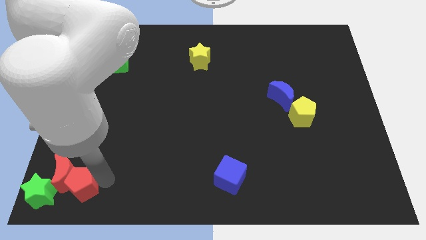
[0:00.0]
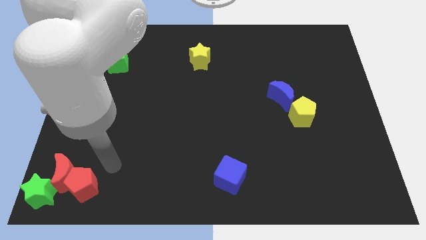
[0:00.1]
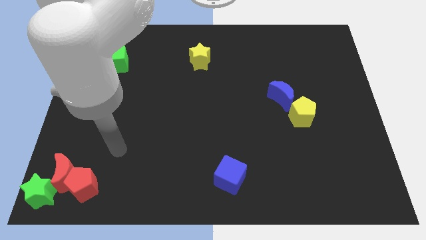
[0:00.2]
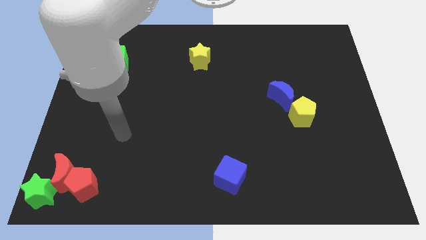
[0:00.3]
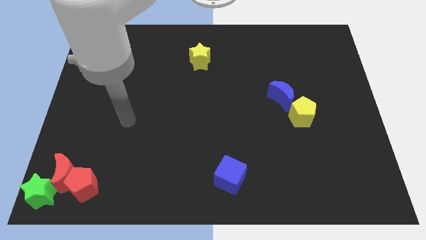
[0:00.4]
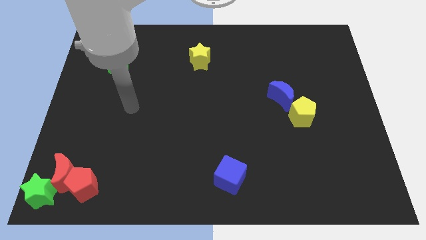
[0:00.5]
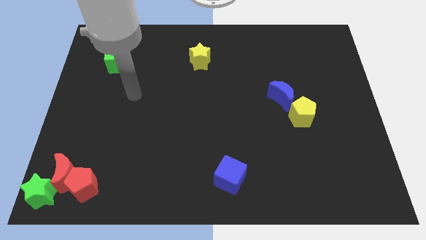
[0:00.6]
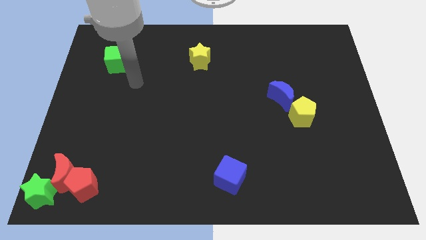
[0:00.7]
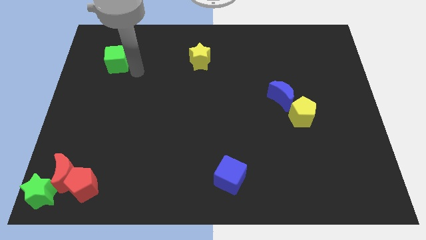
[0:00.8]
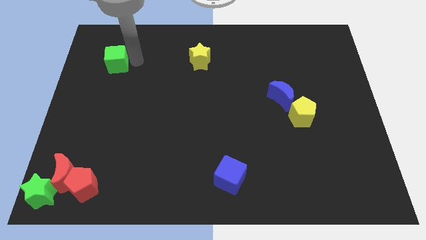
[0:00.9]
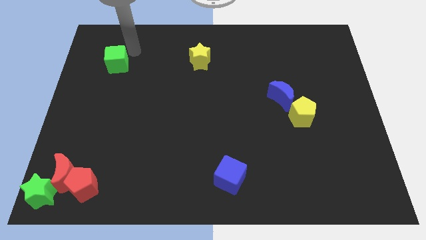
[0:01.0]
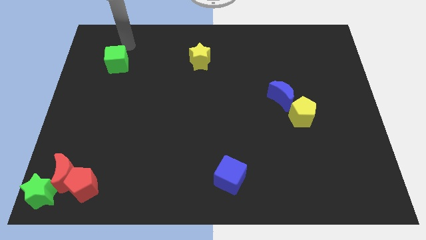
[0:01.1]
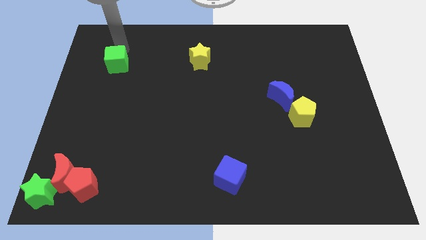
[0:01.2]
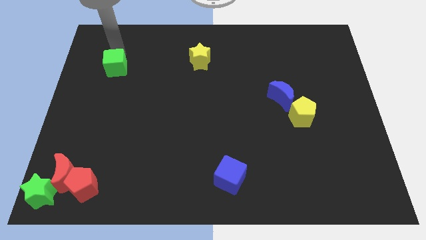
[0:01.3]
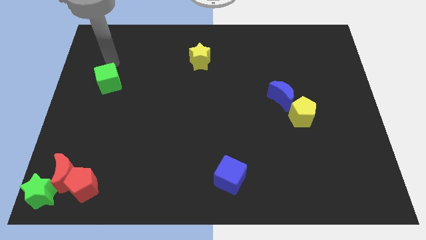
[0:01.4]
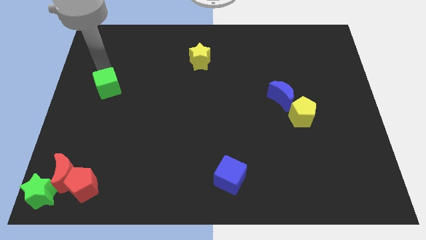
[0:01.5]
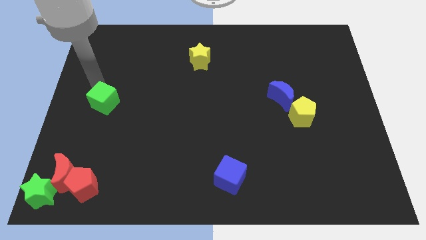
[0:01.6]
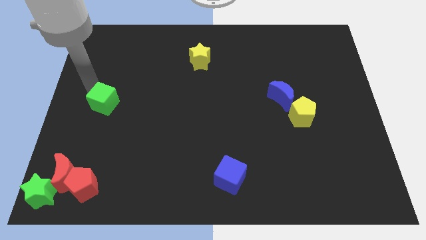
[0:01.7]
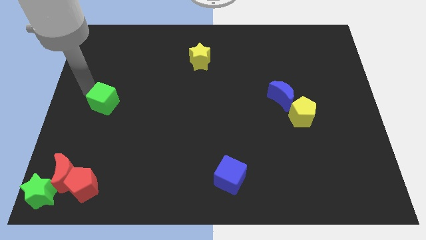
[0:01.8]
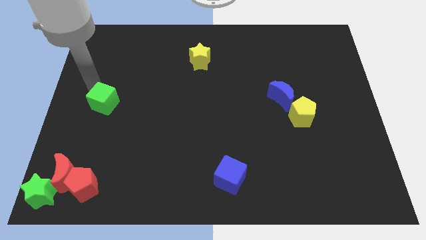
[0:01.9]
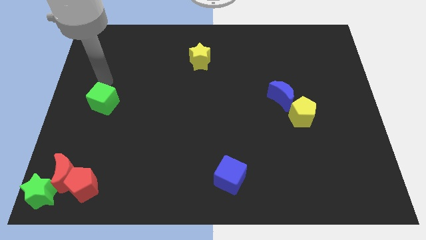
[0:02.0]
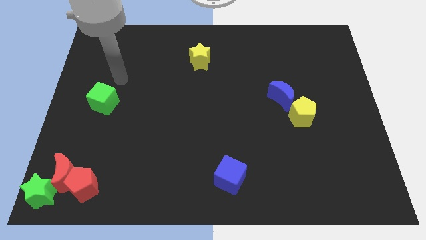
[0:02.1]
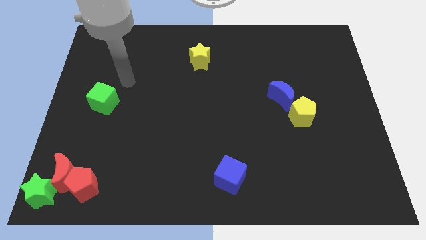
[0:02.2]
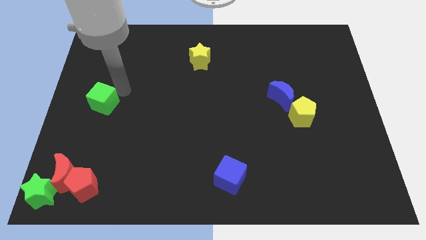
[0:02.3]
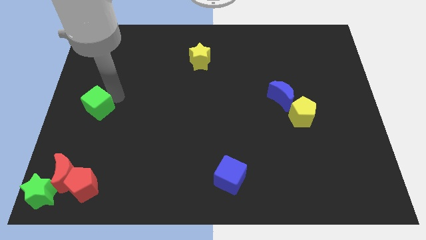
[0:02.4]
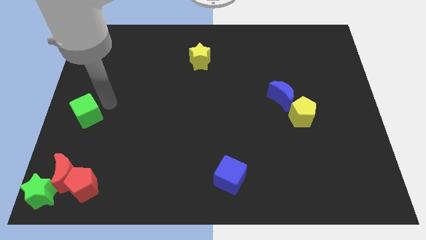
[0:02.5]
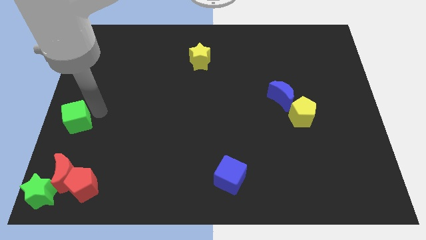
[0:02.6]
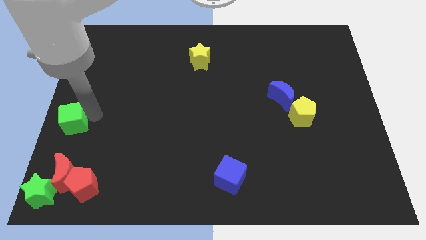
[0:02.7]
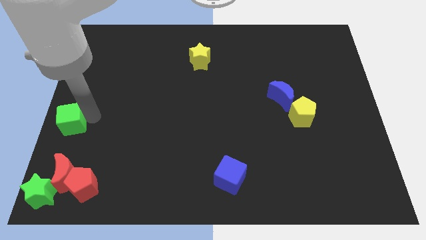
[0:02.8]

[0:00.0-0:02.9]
push green cube close to the red crescent

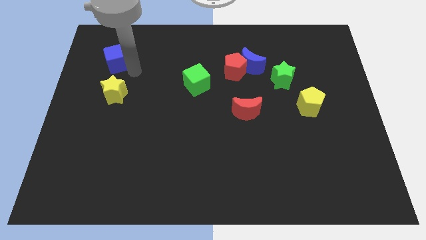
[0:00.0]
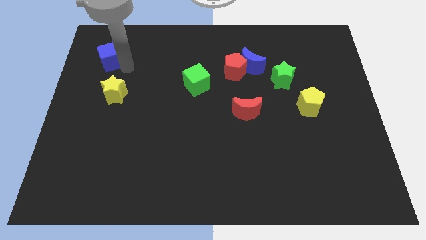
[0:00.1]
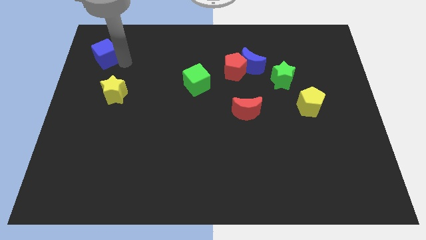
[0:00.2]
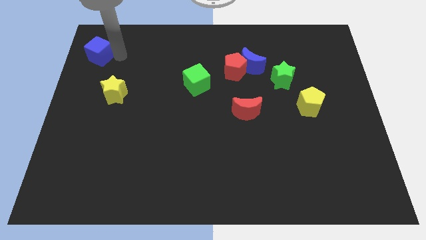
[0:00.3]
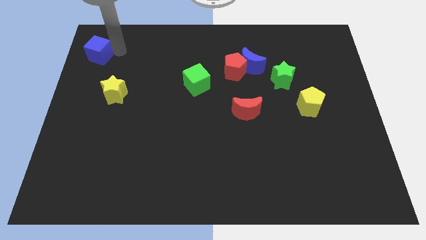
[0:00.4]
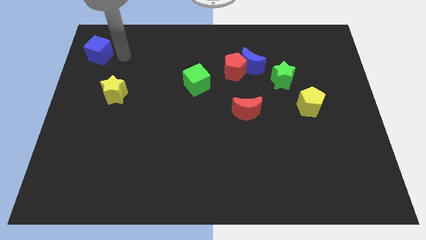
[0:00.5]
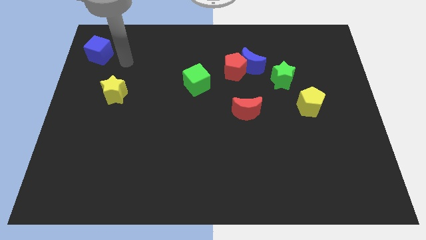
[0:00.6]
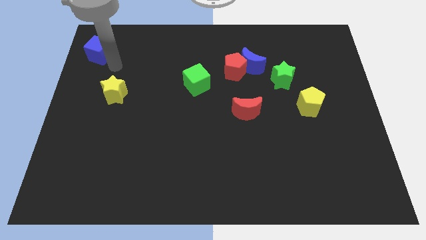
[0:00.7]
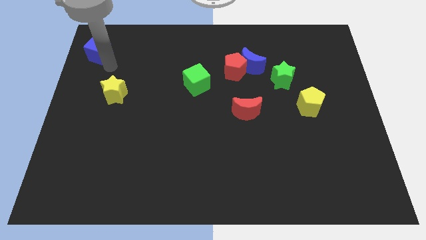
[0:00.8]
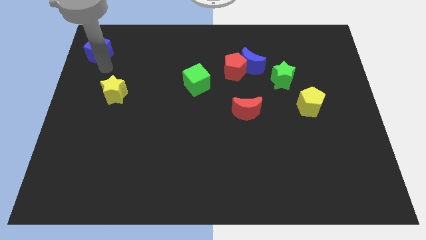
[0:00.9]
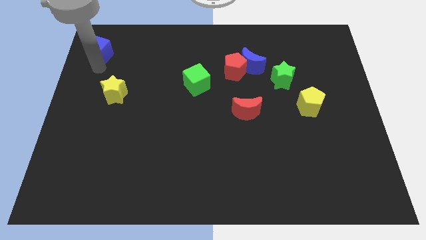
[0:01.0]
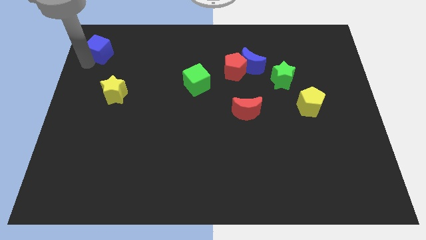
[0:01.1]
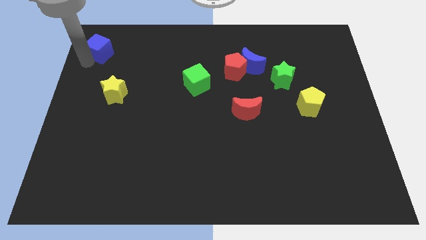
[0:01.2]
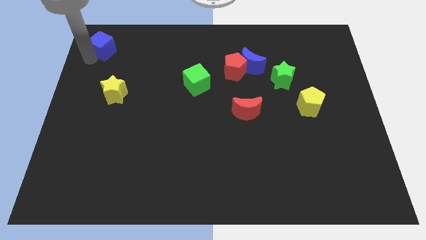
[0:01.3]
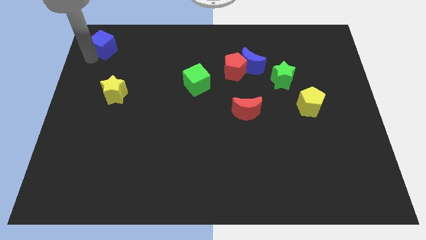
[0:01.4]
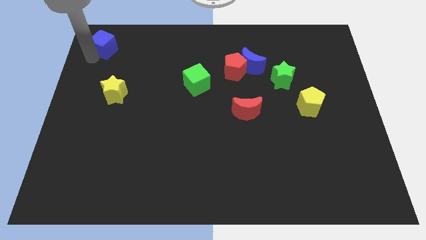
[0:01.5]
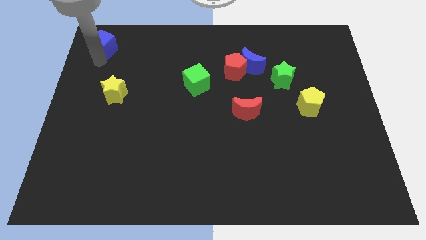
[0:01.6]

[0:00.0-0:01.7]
push the blue cube to the top of the board

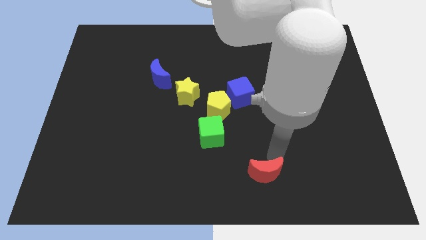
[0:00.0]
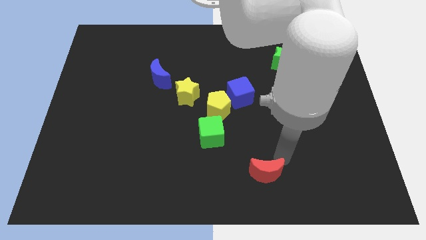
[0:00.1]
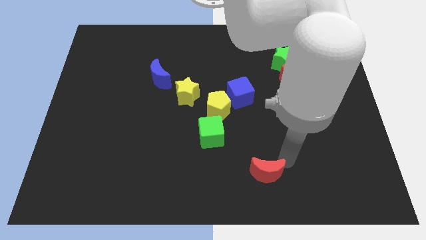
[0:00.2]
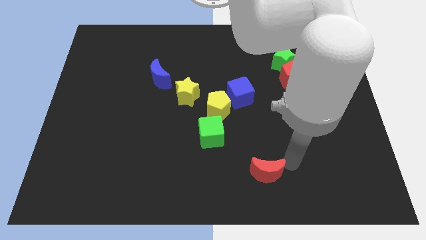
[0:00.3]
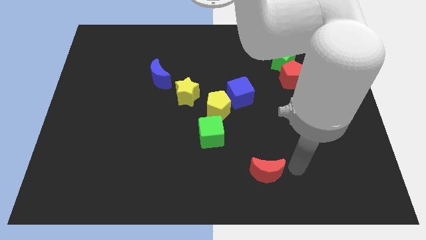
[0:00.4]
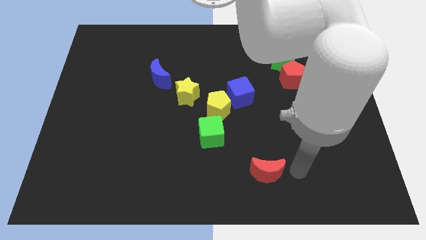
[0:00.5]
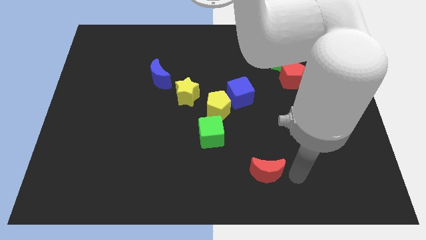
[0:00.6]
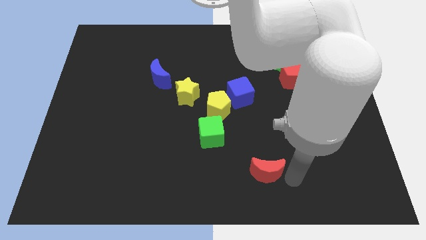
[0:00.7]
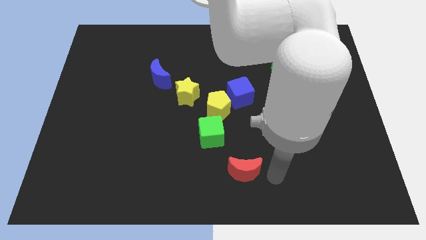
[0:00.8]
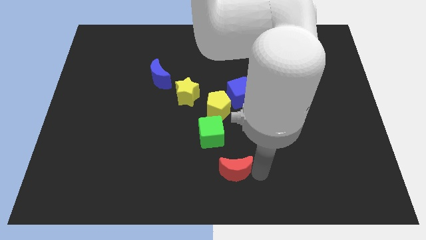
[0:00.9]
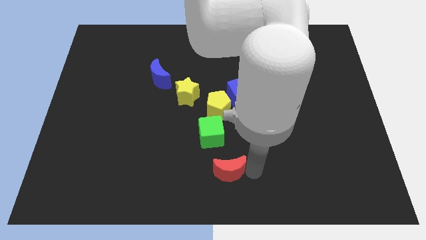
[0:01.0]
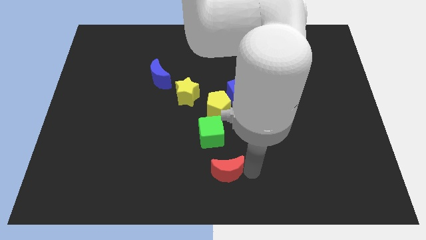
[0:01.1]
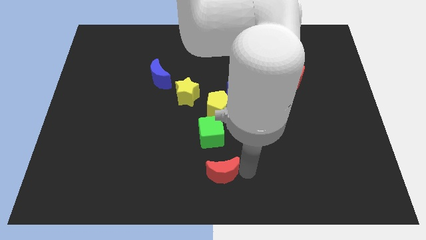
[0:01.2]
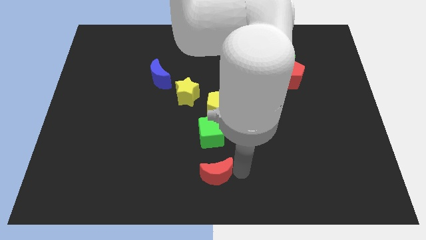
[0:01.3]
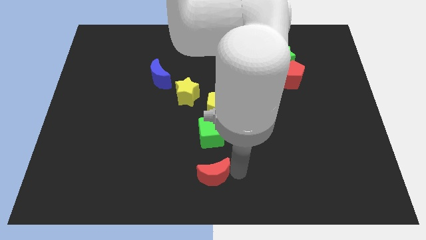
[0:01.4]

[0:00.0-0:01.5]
move the red moon down to the green cube

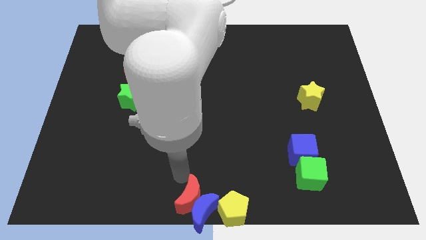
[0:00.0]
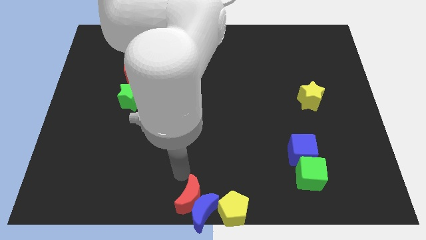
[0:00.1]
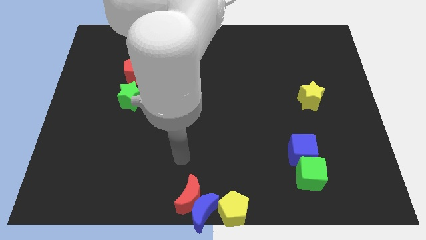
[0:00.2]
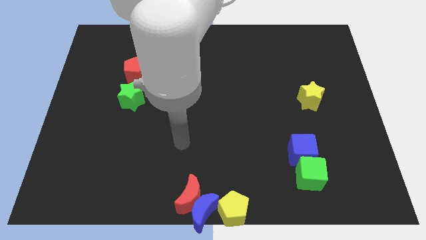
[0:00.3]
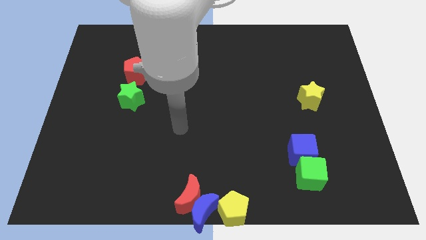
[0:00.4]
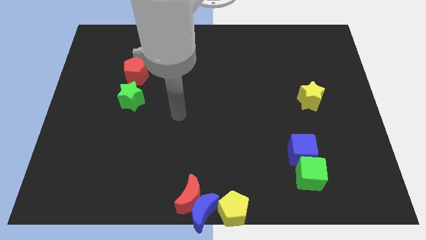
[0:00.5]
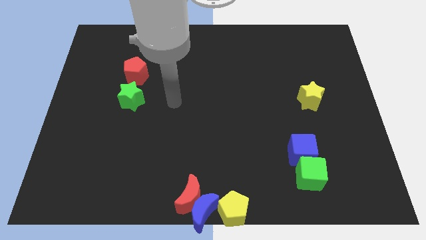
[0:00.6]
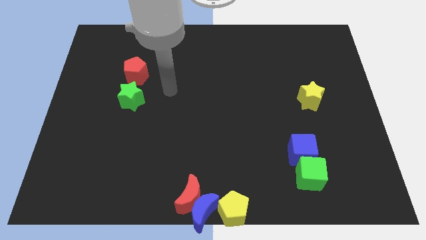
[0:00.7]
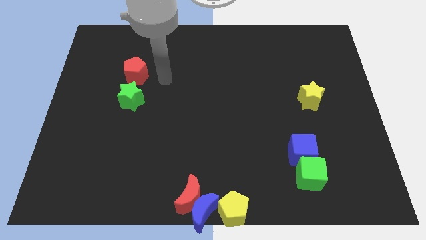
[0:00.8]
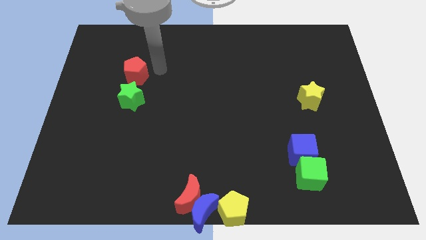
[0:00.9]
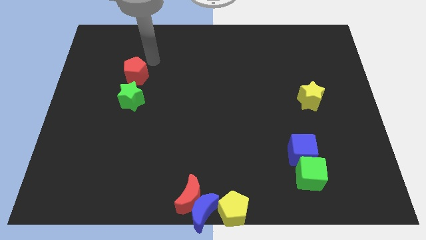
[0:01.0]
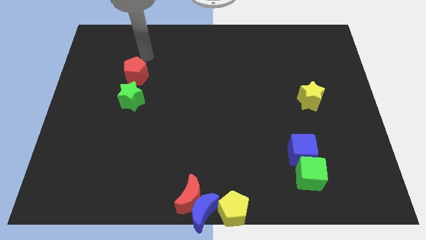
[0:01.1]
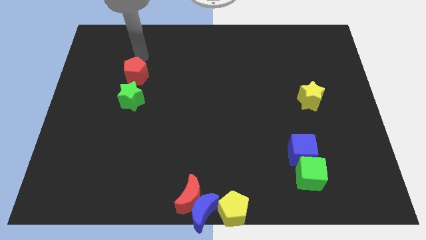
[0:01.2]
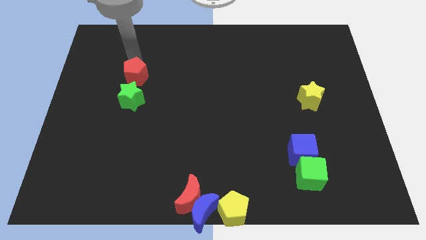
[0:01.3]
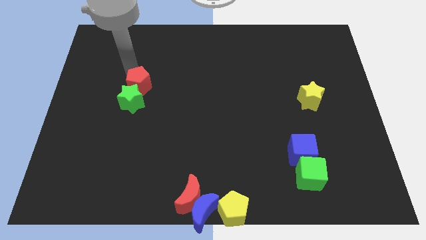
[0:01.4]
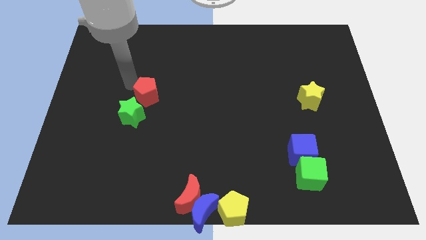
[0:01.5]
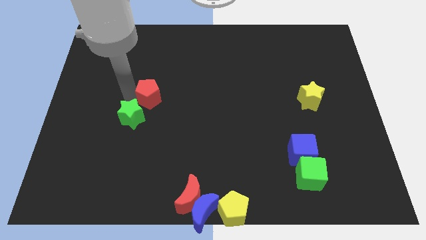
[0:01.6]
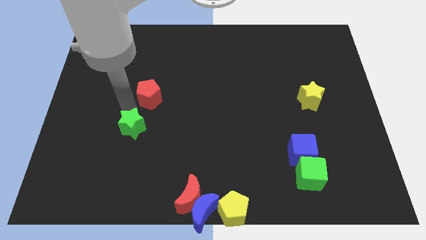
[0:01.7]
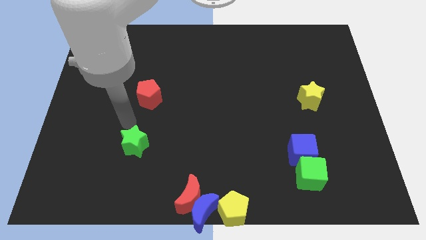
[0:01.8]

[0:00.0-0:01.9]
push the green star towards the bottom of the board

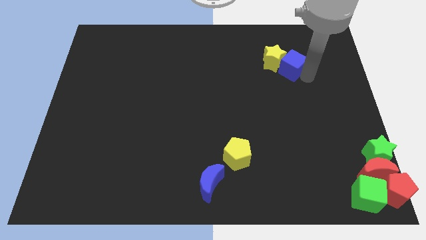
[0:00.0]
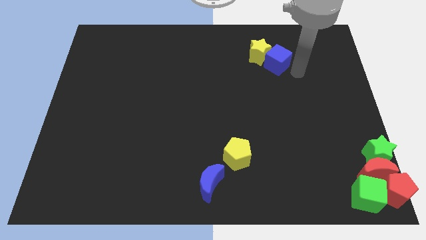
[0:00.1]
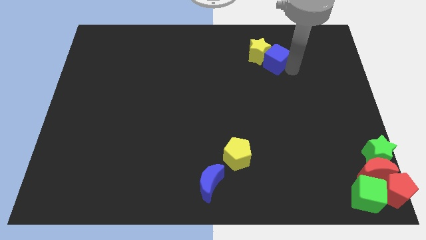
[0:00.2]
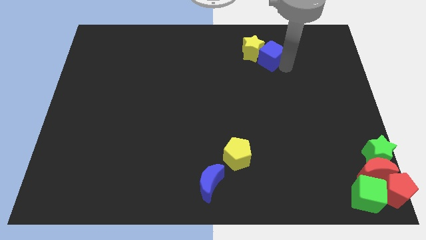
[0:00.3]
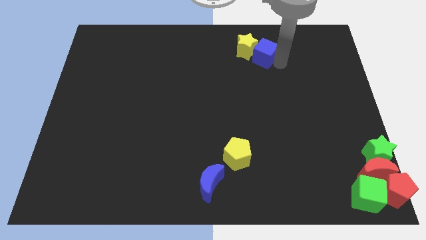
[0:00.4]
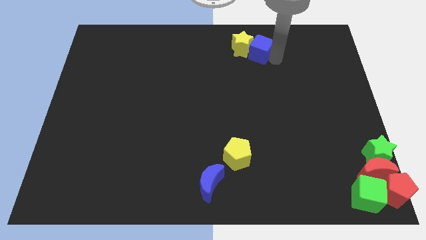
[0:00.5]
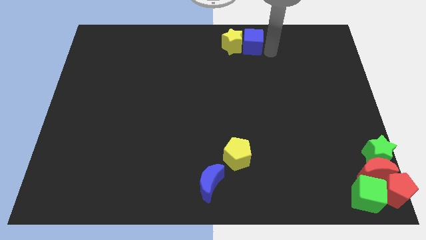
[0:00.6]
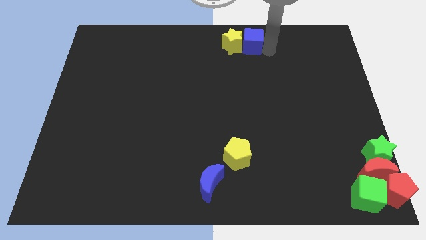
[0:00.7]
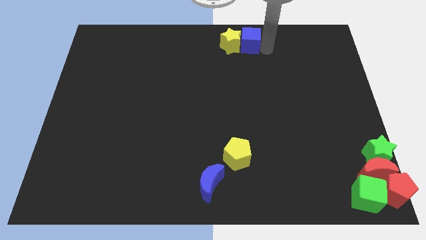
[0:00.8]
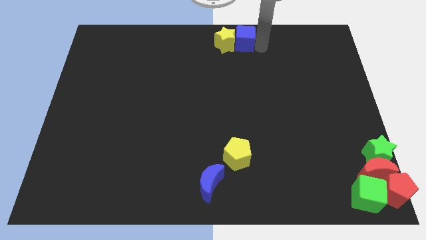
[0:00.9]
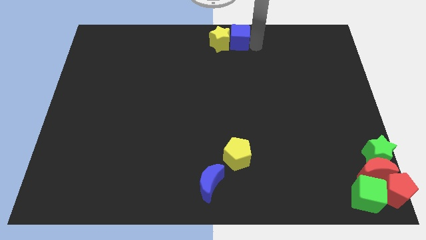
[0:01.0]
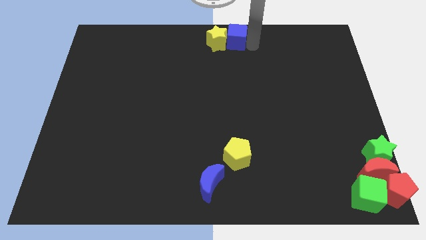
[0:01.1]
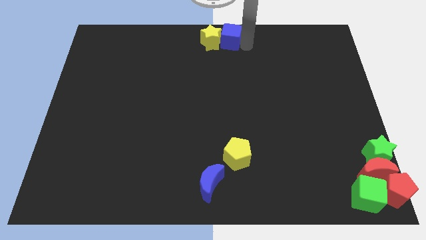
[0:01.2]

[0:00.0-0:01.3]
push blue cube above yellow pentagon
